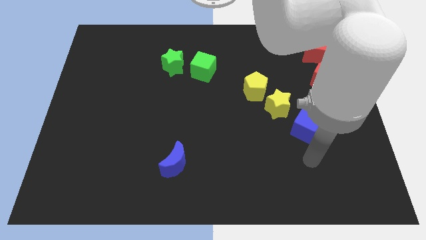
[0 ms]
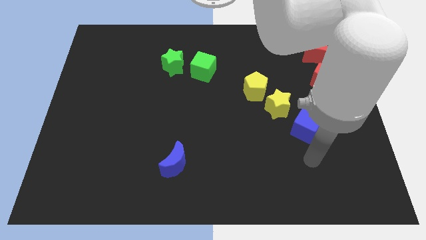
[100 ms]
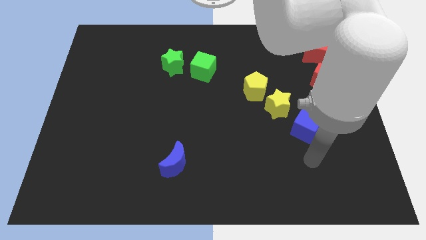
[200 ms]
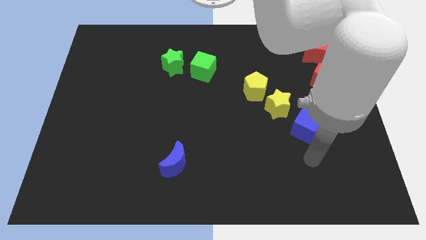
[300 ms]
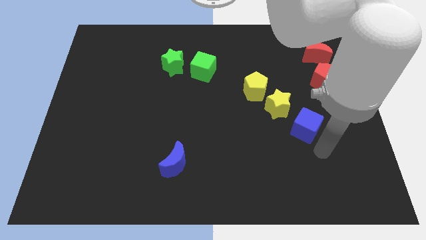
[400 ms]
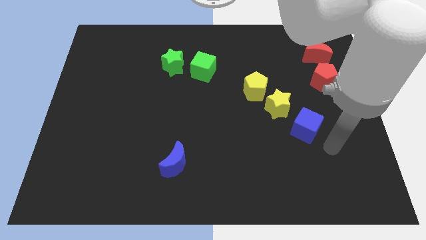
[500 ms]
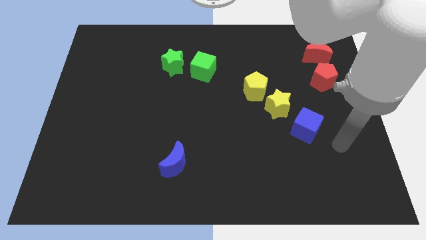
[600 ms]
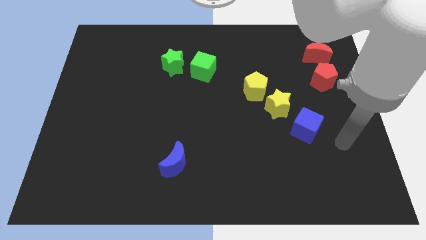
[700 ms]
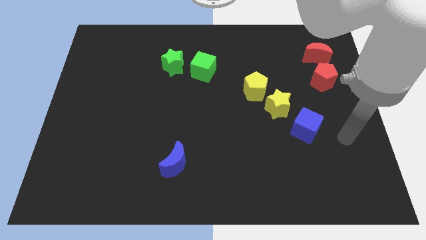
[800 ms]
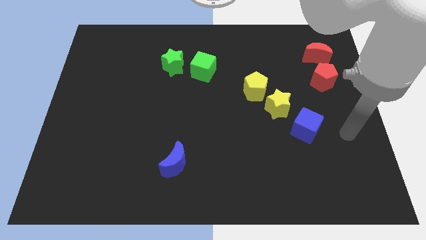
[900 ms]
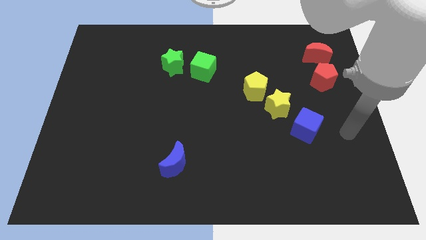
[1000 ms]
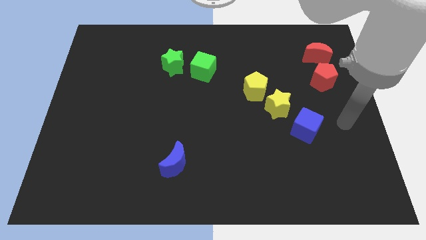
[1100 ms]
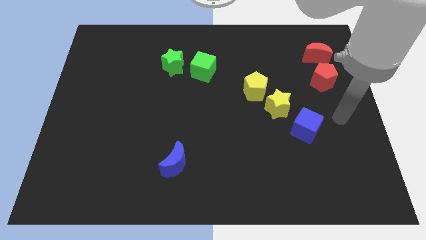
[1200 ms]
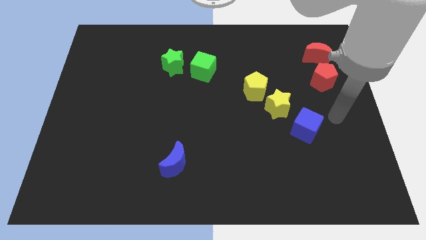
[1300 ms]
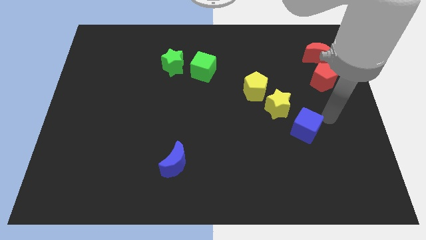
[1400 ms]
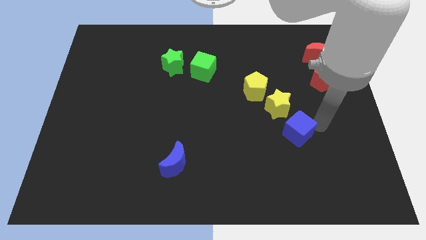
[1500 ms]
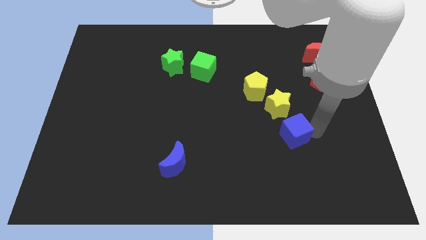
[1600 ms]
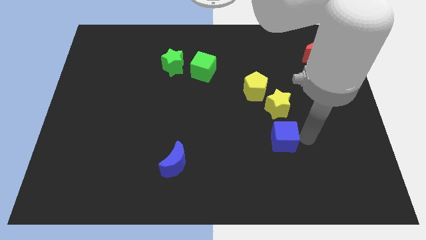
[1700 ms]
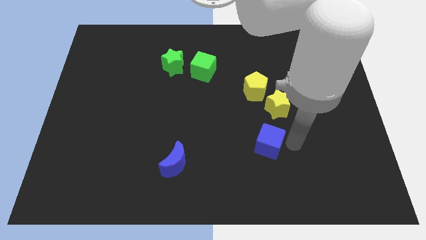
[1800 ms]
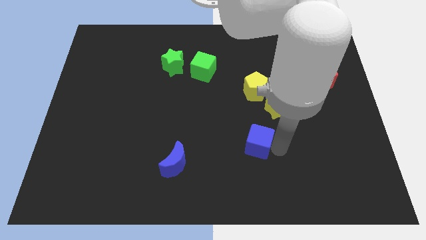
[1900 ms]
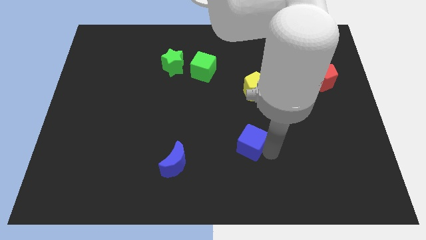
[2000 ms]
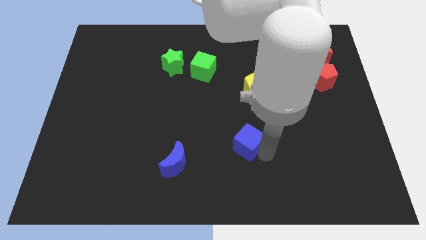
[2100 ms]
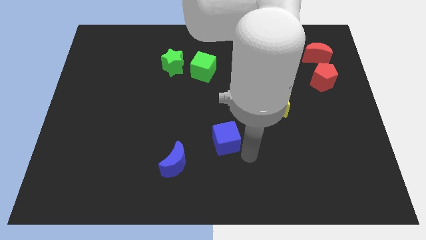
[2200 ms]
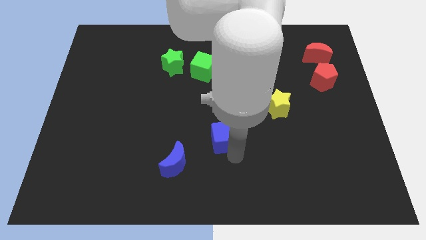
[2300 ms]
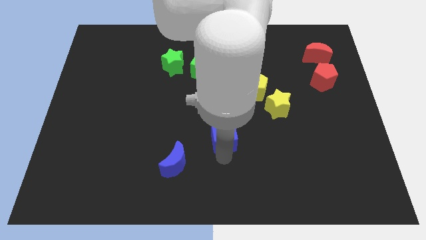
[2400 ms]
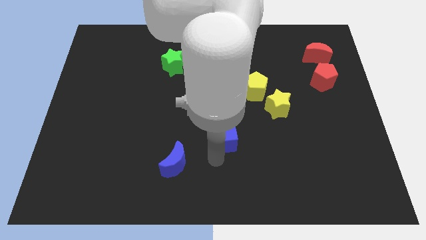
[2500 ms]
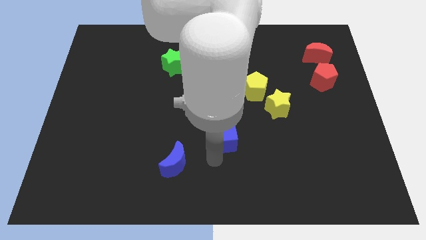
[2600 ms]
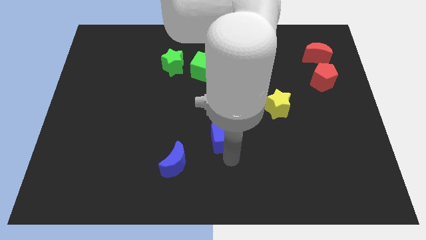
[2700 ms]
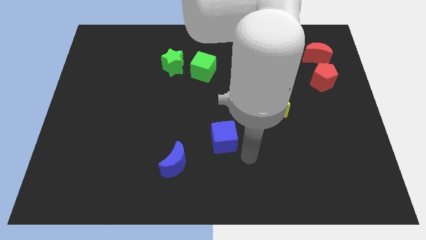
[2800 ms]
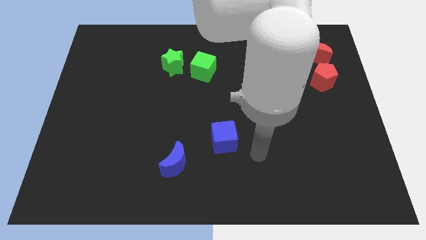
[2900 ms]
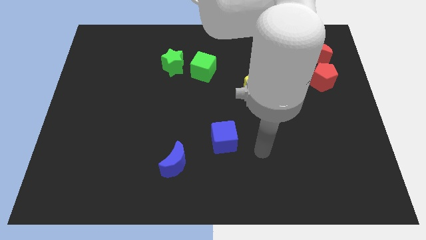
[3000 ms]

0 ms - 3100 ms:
push the blue cube to the top right of the blue crescent

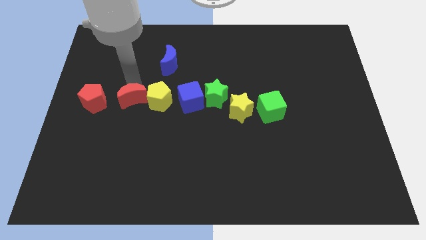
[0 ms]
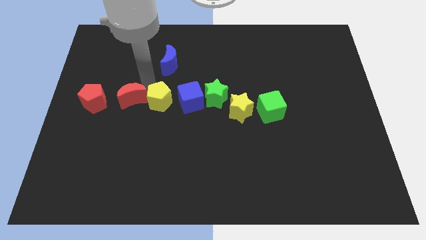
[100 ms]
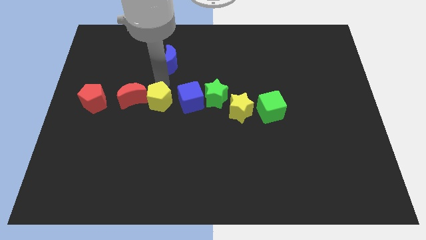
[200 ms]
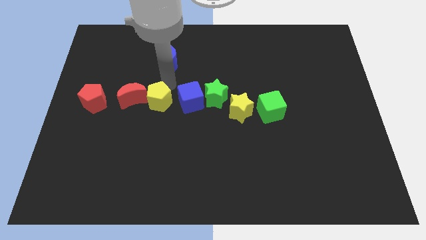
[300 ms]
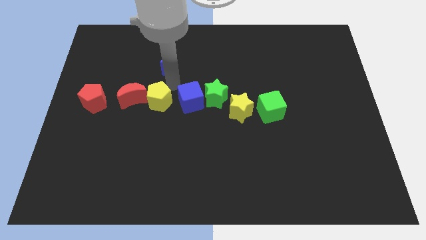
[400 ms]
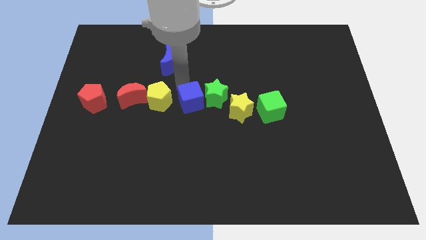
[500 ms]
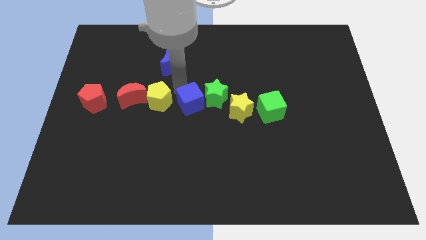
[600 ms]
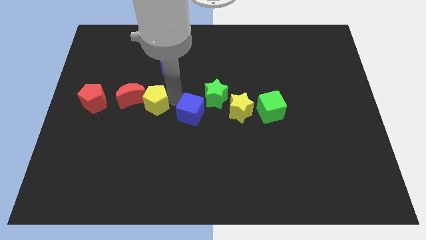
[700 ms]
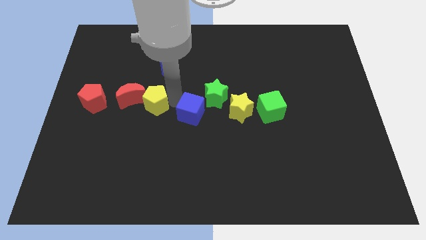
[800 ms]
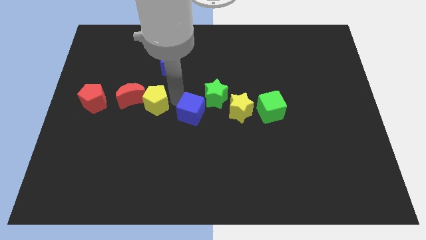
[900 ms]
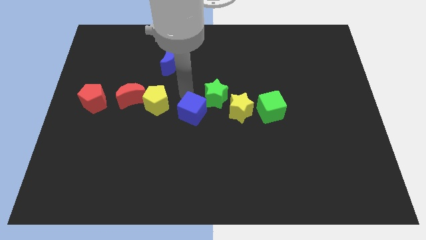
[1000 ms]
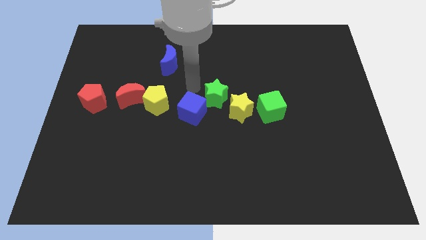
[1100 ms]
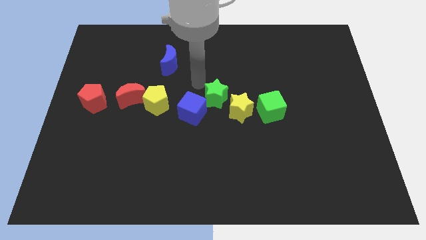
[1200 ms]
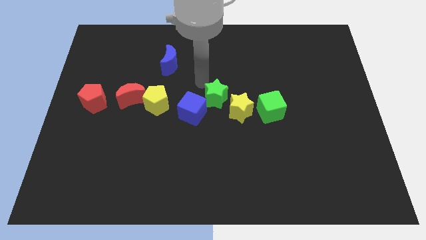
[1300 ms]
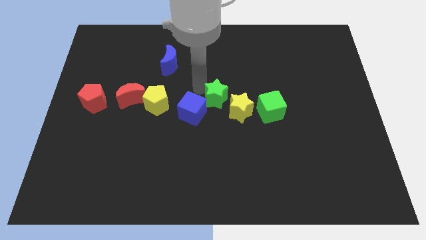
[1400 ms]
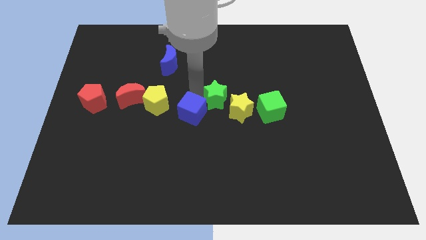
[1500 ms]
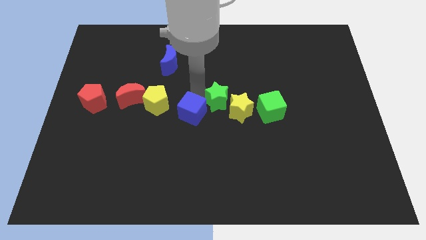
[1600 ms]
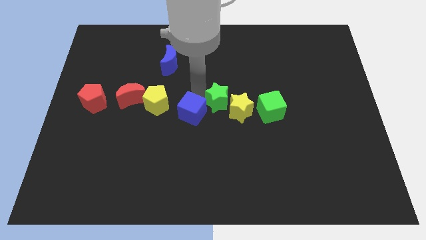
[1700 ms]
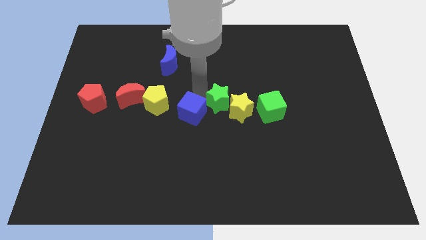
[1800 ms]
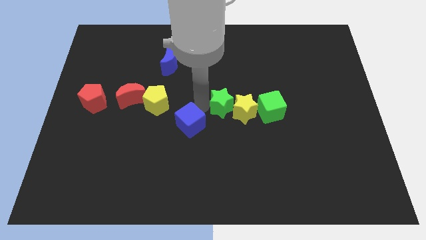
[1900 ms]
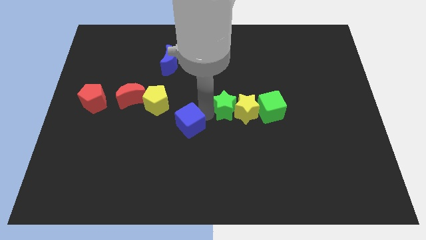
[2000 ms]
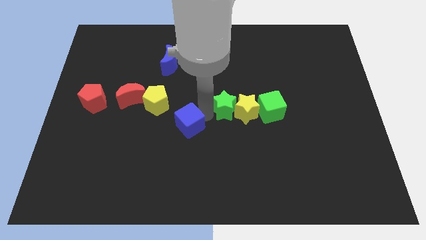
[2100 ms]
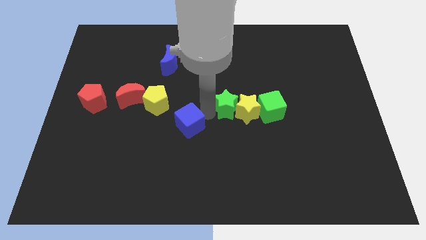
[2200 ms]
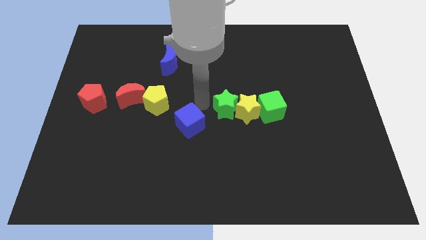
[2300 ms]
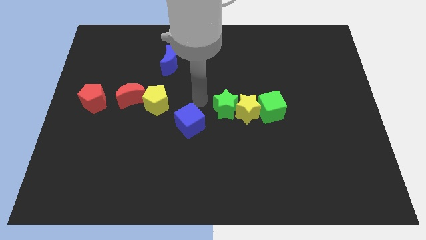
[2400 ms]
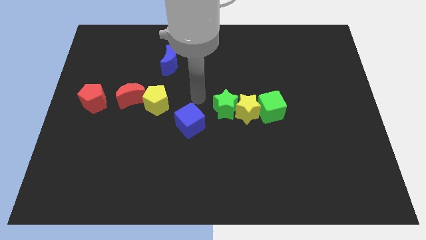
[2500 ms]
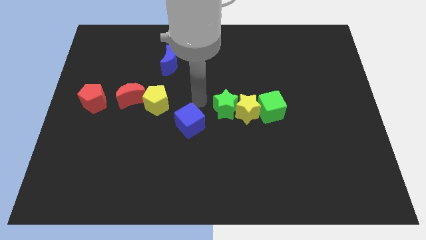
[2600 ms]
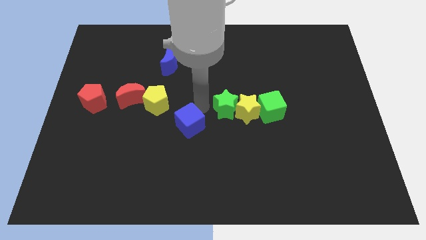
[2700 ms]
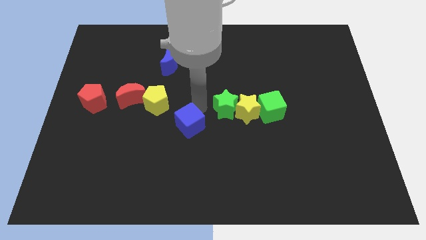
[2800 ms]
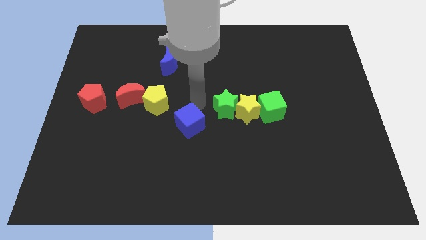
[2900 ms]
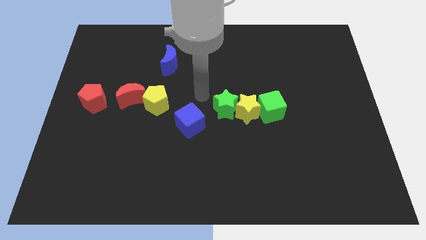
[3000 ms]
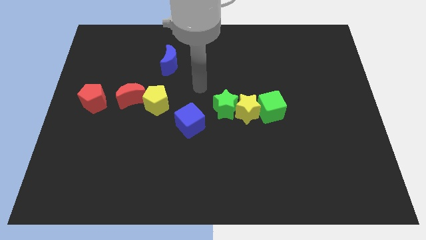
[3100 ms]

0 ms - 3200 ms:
separate blue cube from green star

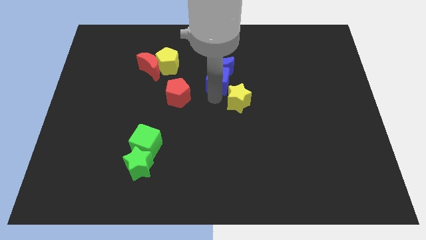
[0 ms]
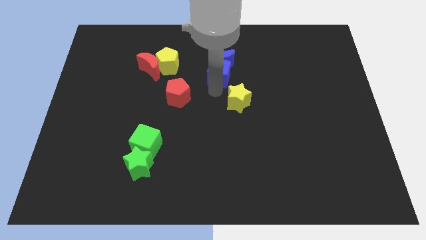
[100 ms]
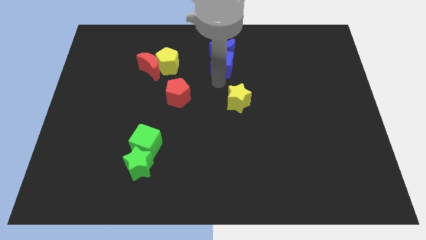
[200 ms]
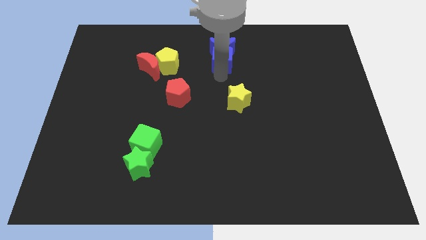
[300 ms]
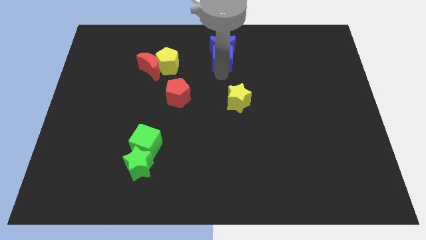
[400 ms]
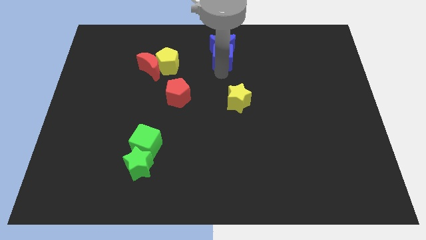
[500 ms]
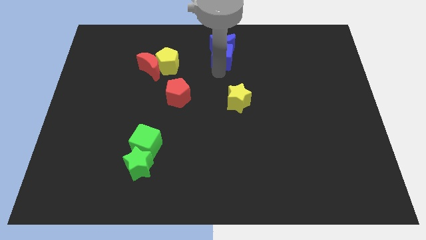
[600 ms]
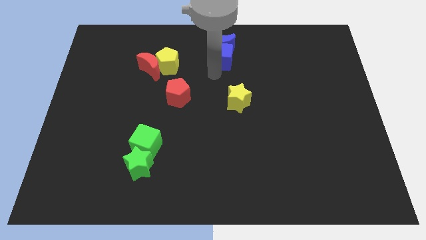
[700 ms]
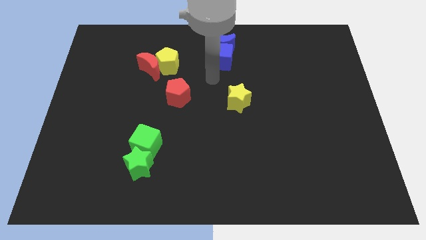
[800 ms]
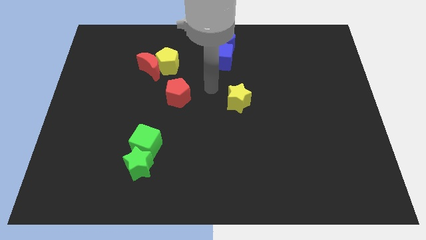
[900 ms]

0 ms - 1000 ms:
push the blue cube along with the blue crescent towards top center of the board

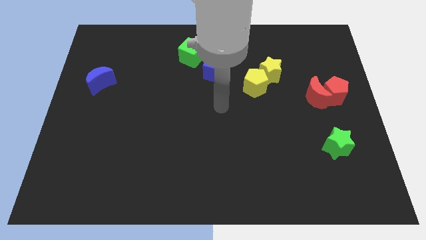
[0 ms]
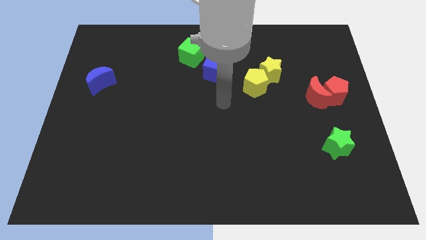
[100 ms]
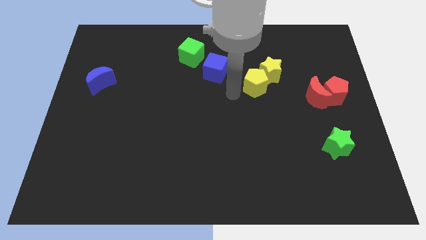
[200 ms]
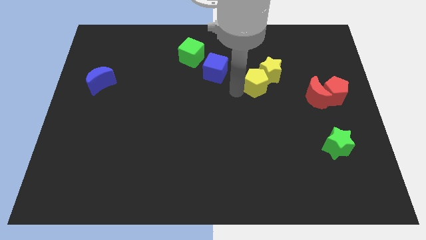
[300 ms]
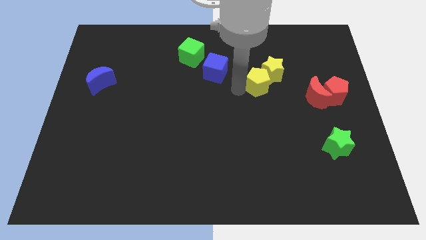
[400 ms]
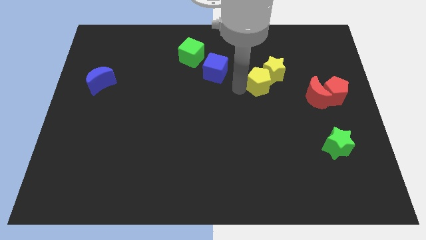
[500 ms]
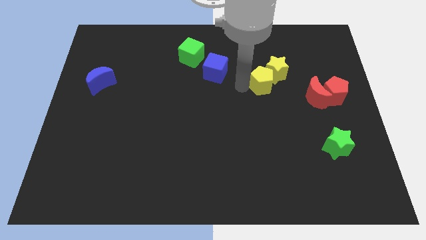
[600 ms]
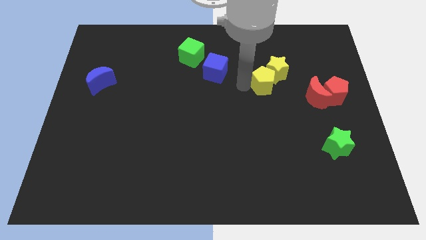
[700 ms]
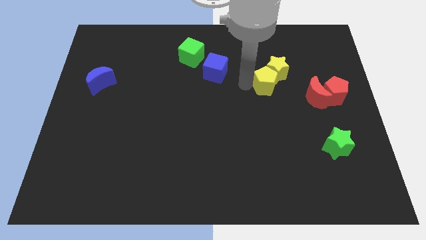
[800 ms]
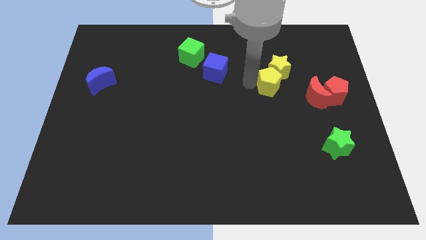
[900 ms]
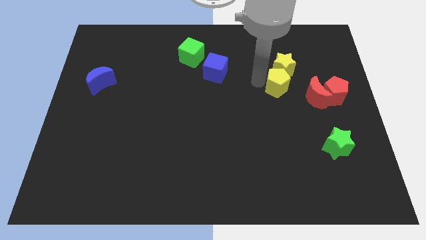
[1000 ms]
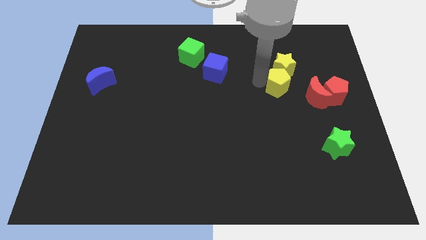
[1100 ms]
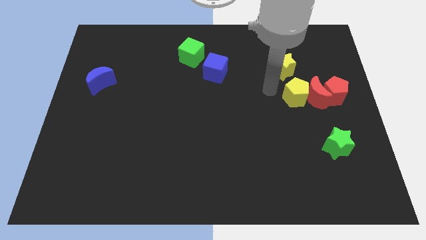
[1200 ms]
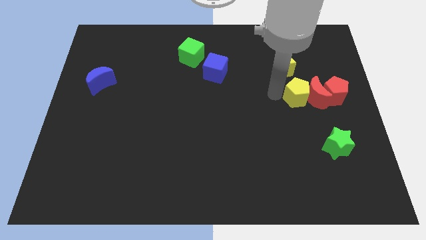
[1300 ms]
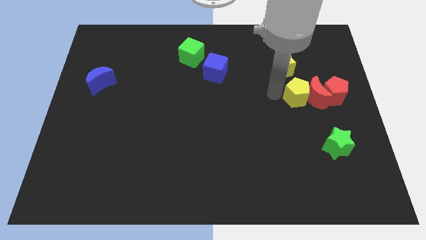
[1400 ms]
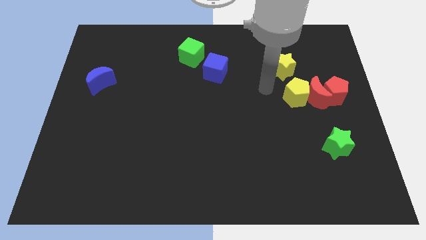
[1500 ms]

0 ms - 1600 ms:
move the yellow pentaon left beside the red moon

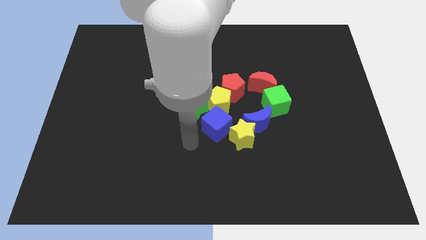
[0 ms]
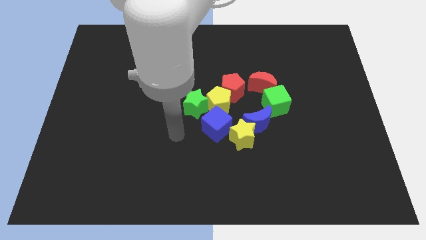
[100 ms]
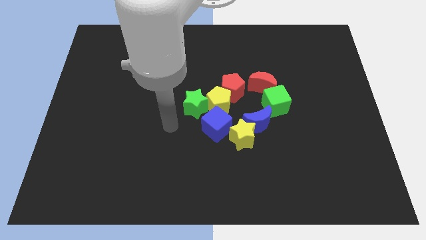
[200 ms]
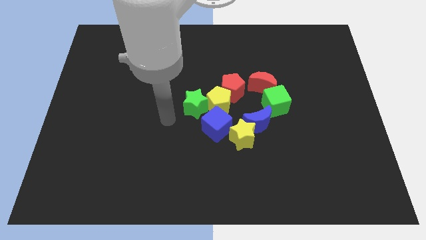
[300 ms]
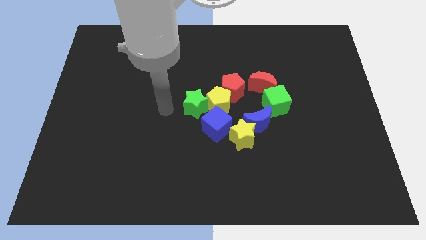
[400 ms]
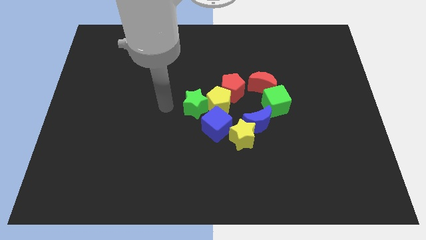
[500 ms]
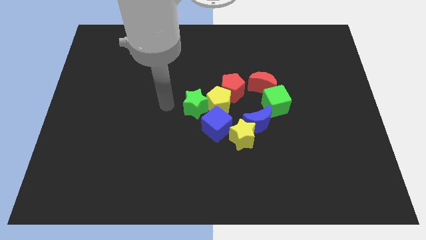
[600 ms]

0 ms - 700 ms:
move the arm left to the green star
